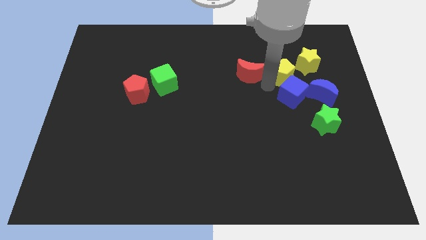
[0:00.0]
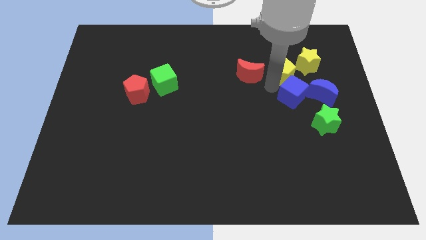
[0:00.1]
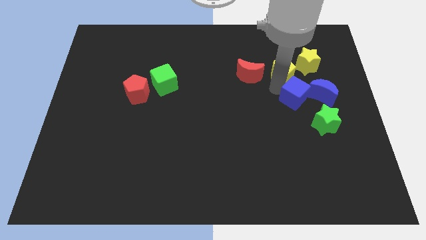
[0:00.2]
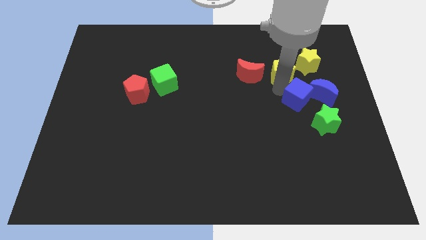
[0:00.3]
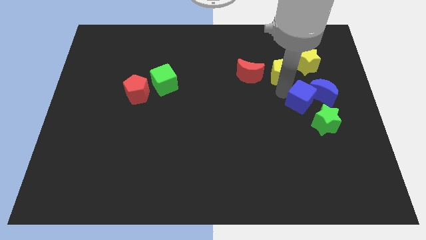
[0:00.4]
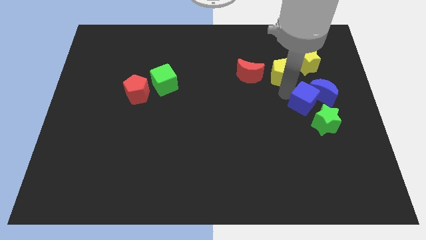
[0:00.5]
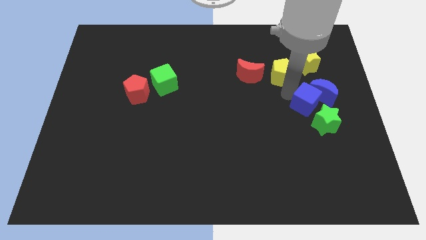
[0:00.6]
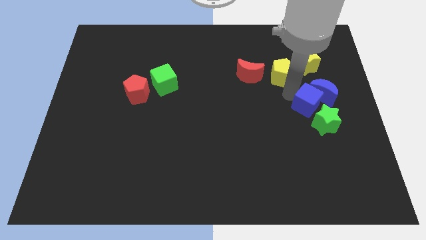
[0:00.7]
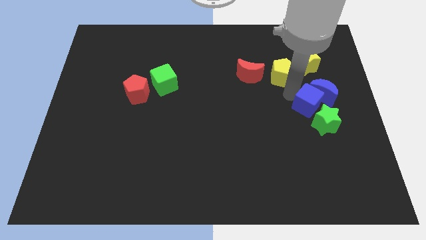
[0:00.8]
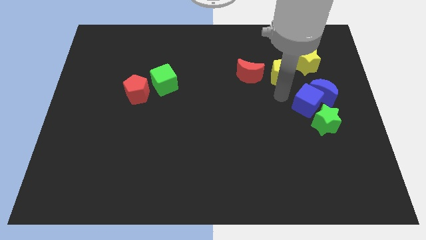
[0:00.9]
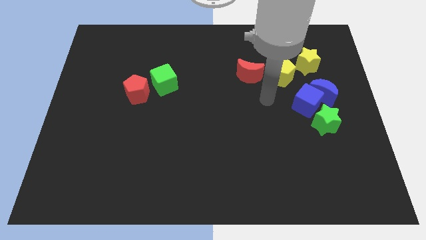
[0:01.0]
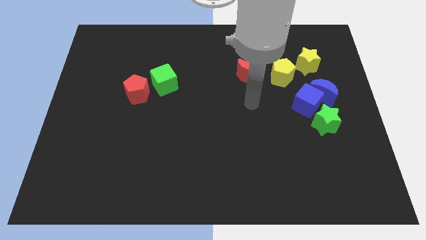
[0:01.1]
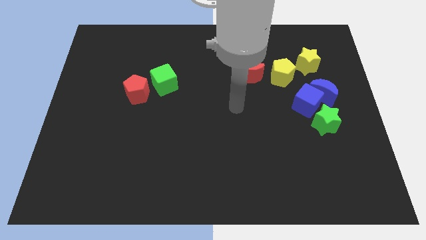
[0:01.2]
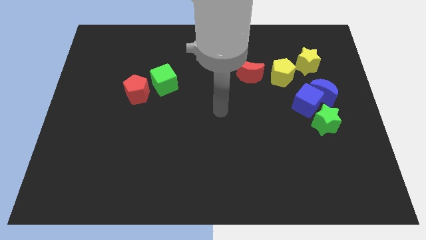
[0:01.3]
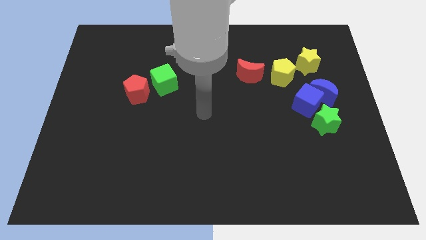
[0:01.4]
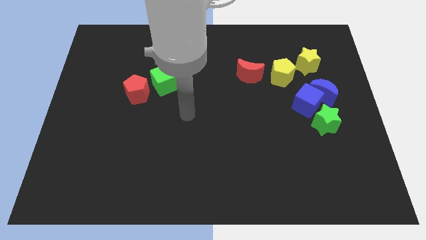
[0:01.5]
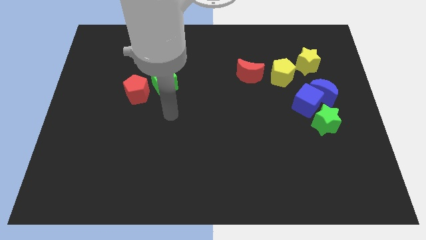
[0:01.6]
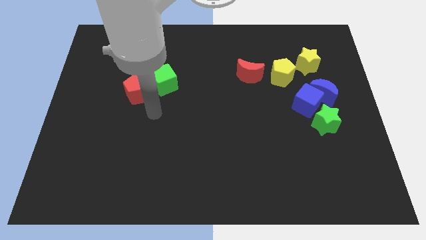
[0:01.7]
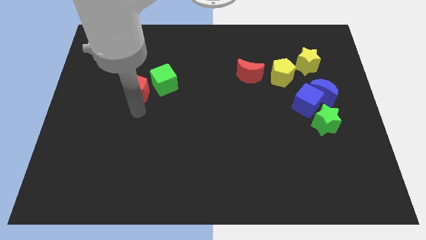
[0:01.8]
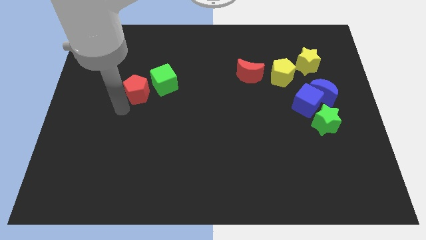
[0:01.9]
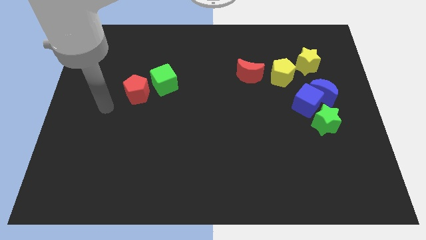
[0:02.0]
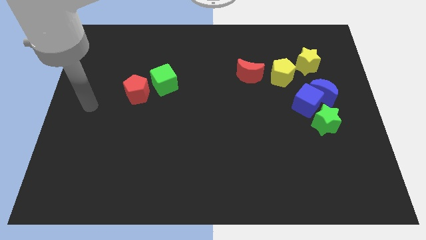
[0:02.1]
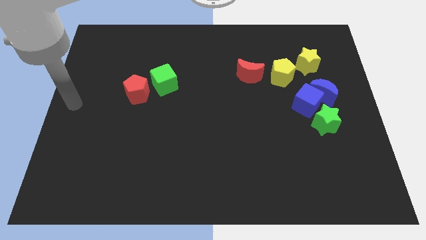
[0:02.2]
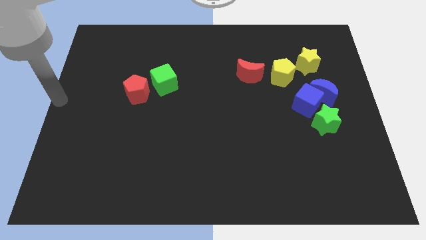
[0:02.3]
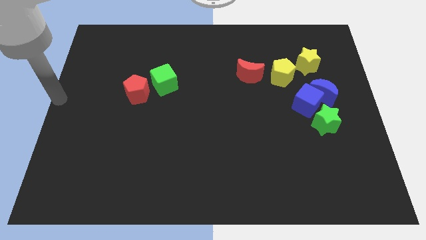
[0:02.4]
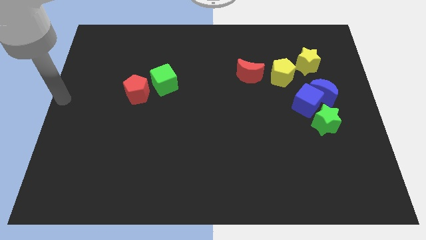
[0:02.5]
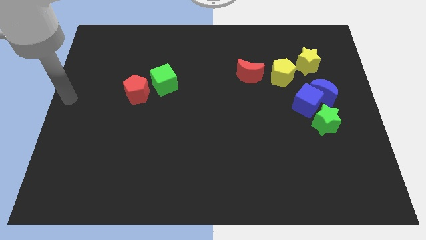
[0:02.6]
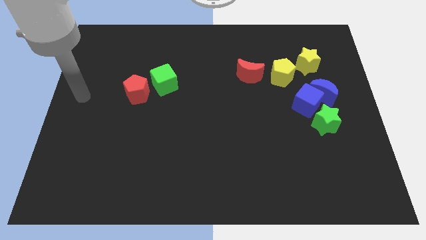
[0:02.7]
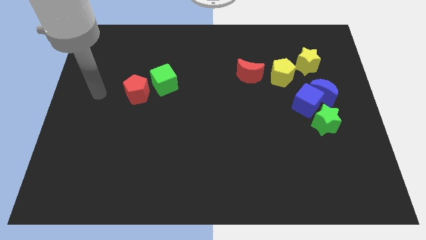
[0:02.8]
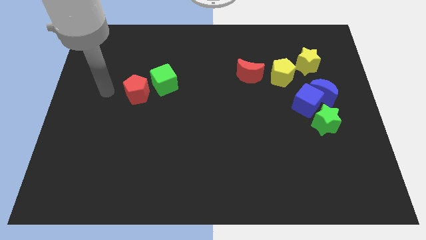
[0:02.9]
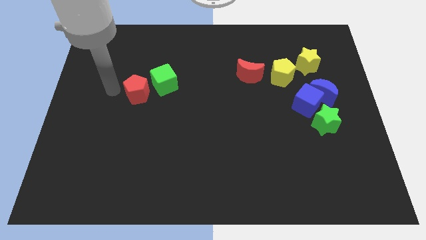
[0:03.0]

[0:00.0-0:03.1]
separate the yellow pentagon and the blue cube

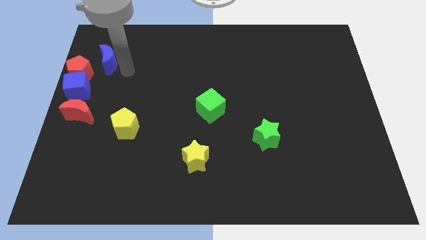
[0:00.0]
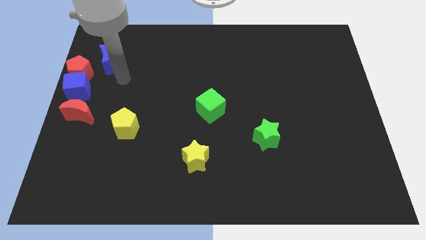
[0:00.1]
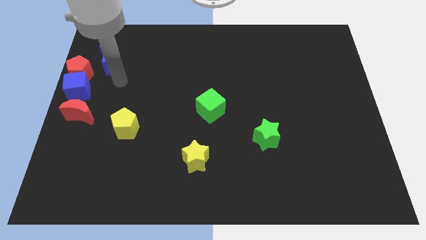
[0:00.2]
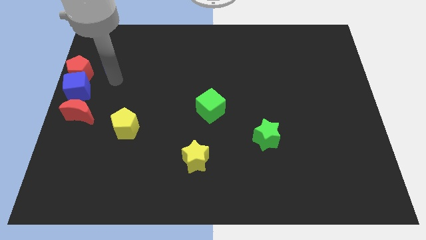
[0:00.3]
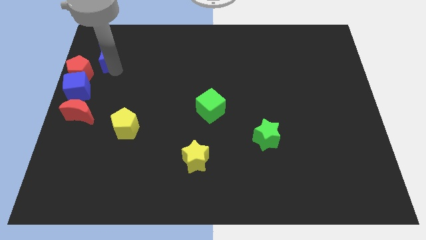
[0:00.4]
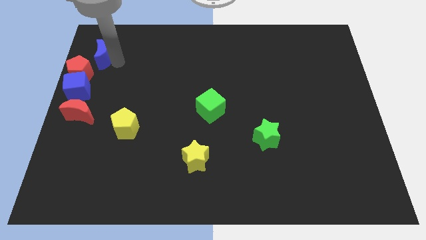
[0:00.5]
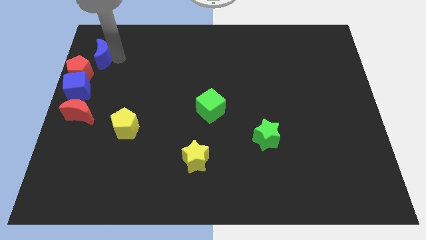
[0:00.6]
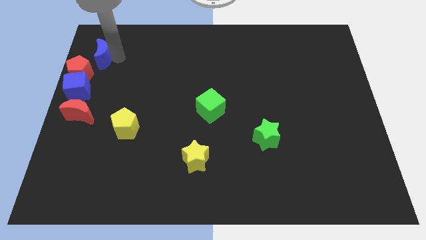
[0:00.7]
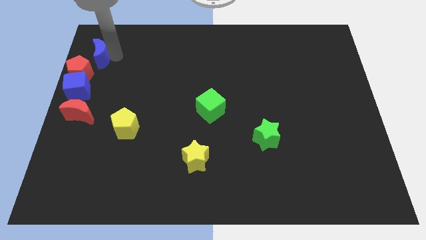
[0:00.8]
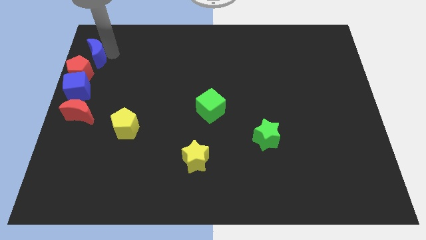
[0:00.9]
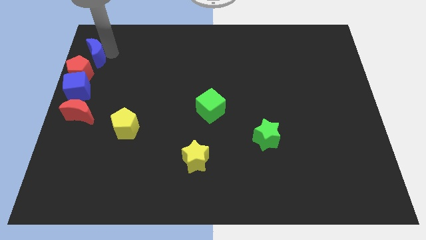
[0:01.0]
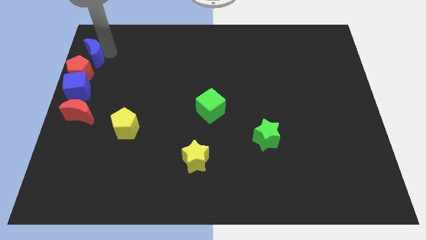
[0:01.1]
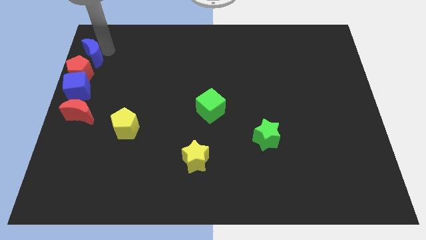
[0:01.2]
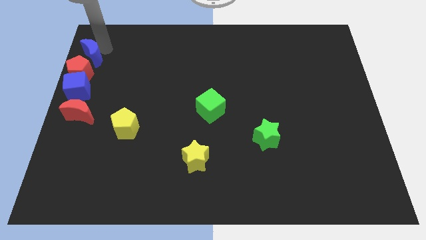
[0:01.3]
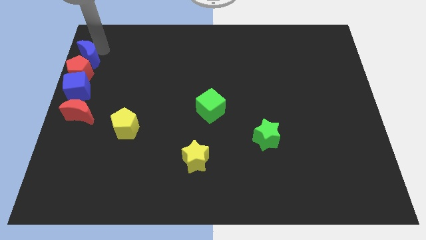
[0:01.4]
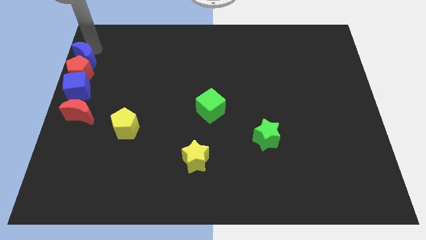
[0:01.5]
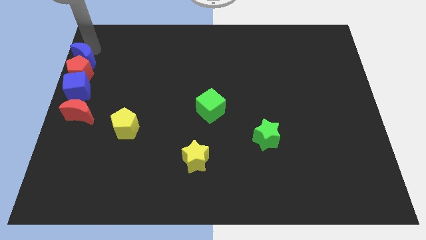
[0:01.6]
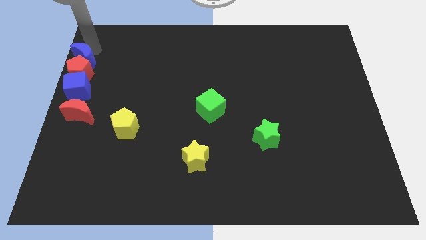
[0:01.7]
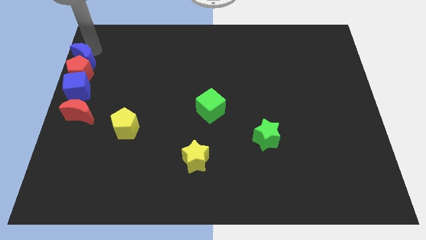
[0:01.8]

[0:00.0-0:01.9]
push the blue moon into the red pentagon

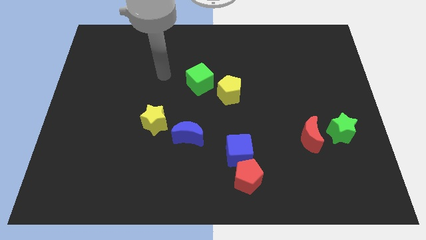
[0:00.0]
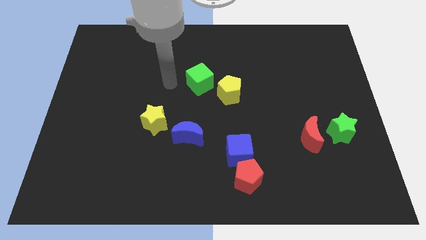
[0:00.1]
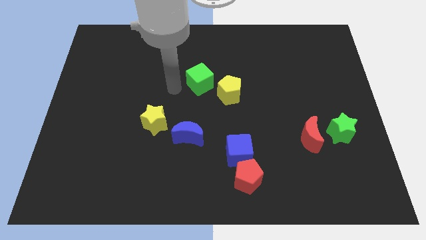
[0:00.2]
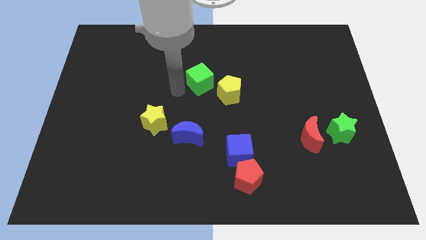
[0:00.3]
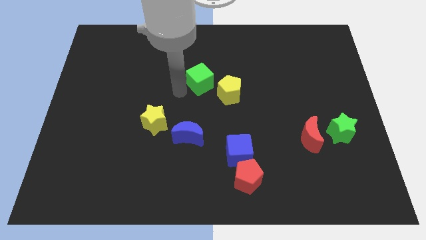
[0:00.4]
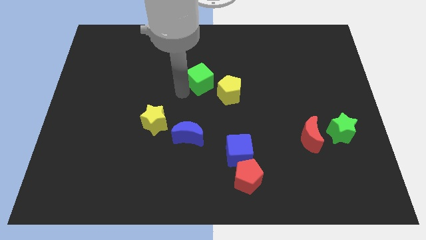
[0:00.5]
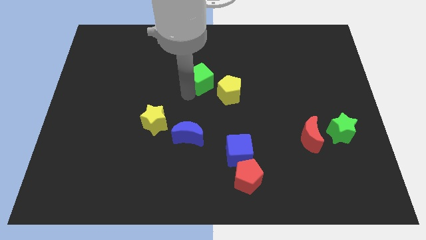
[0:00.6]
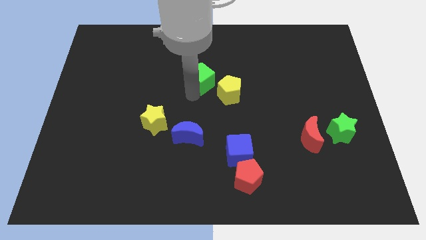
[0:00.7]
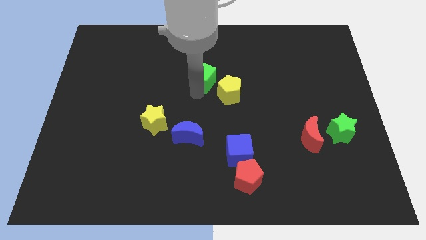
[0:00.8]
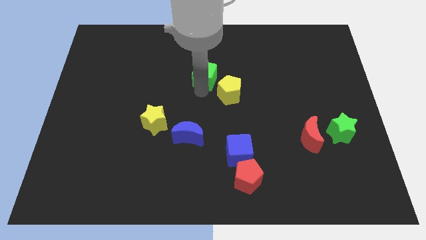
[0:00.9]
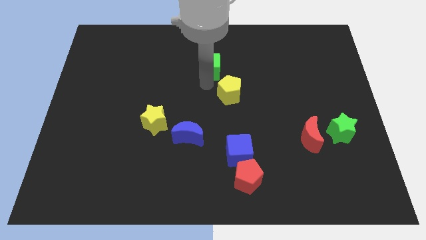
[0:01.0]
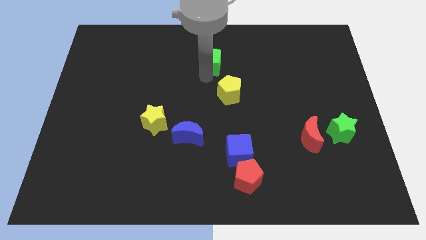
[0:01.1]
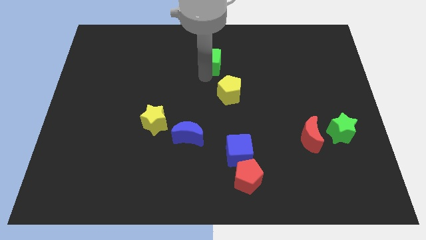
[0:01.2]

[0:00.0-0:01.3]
push the green cube to the top of the board

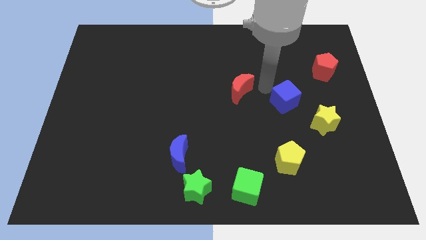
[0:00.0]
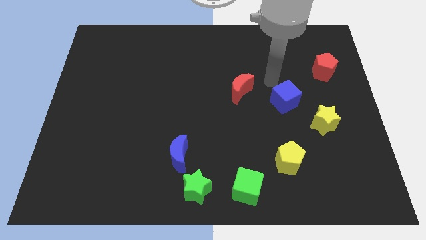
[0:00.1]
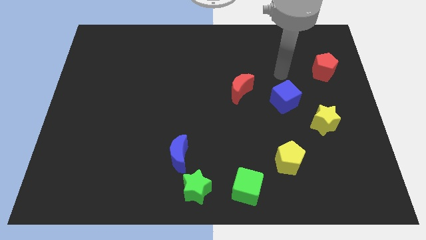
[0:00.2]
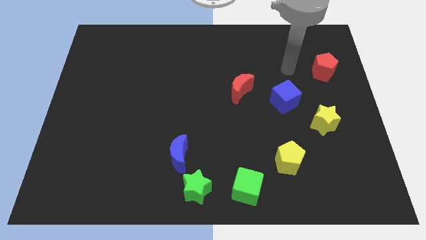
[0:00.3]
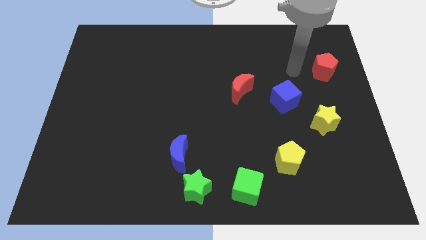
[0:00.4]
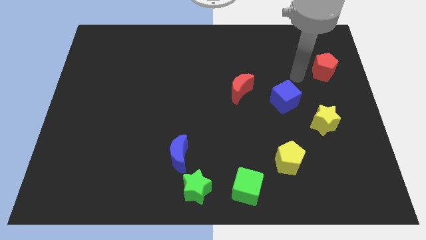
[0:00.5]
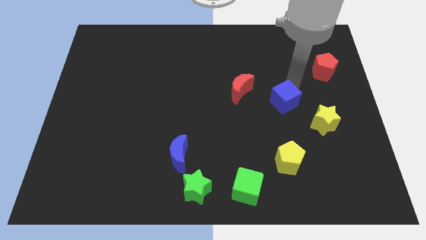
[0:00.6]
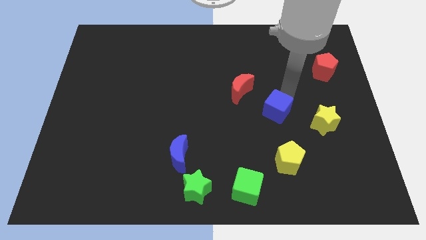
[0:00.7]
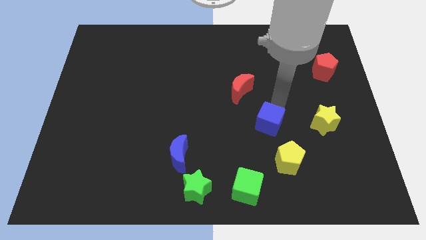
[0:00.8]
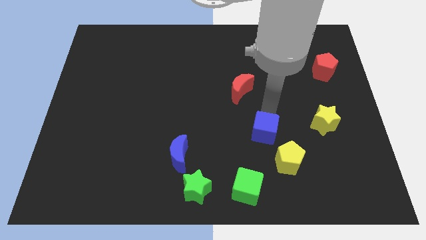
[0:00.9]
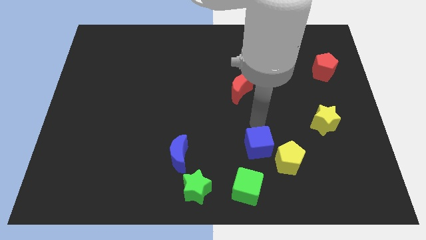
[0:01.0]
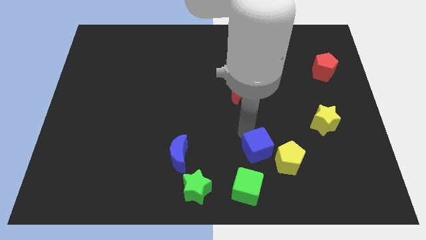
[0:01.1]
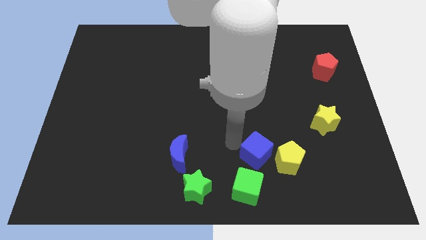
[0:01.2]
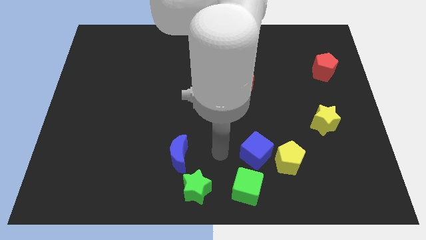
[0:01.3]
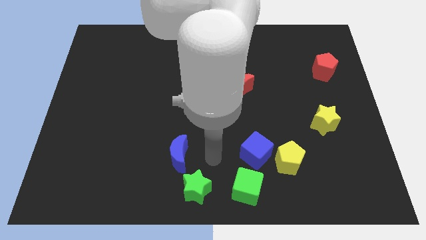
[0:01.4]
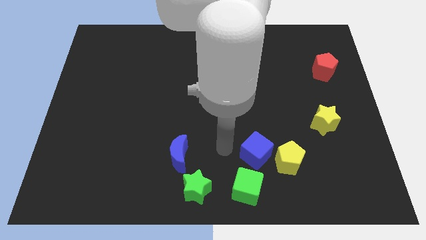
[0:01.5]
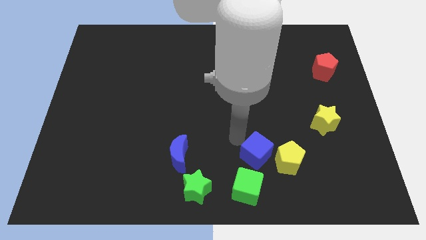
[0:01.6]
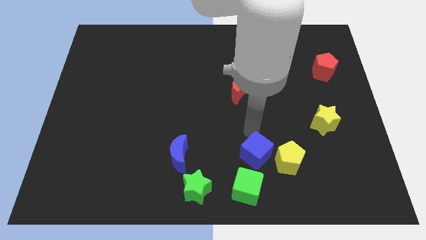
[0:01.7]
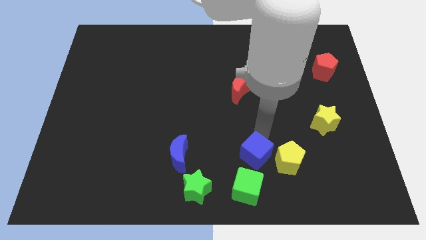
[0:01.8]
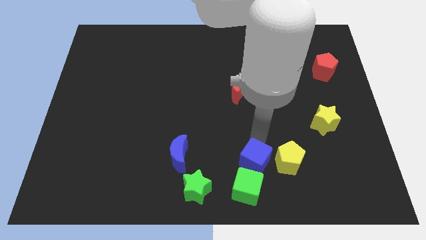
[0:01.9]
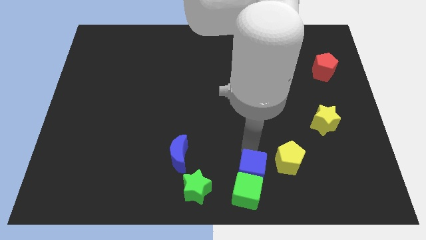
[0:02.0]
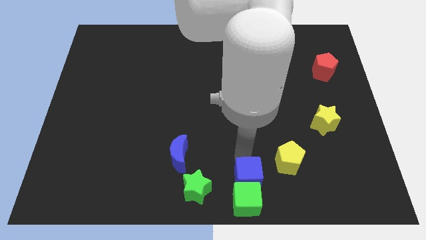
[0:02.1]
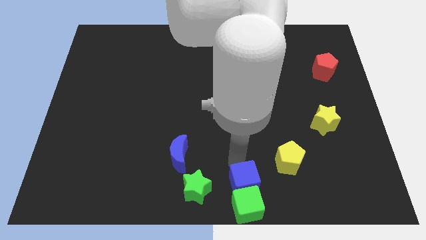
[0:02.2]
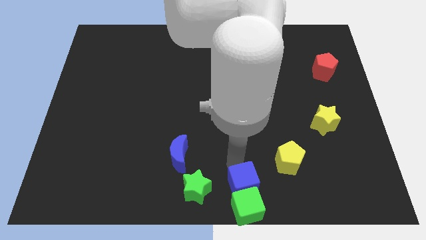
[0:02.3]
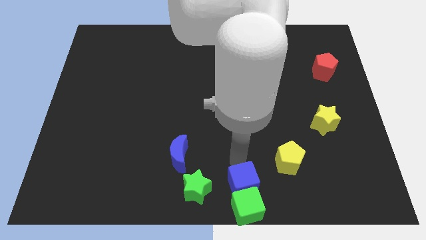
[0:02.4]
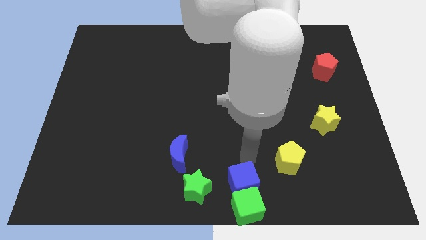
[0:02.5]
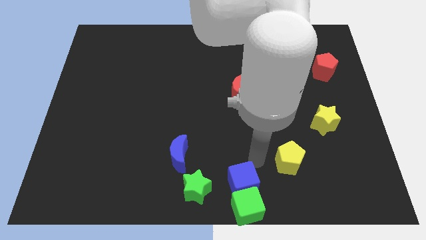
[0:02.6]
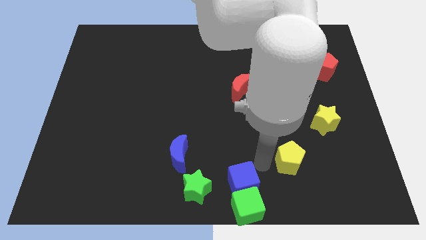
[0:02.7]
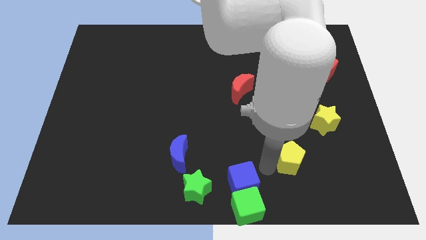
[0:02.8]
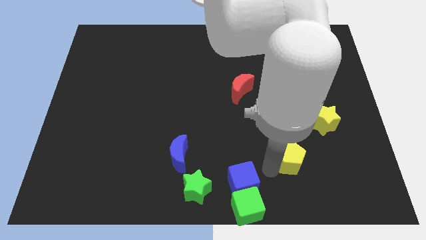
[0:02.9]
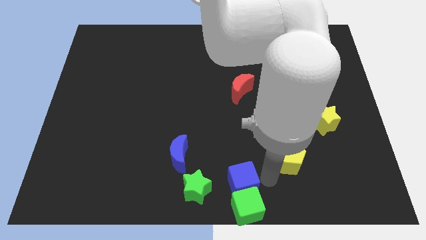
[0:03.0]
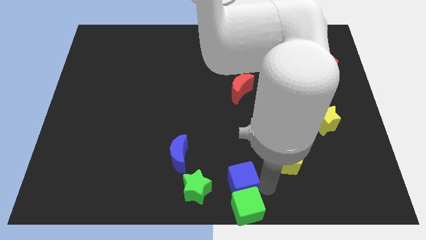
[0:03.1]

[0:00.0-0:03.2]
push the green cube to the bottom center with the blue cube
